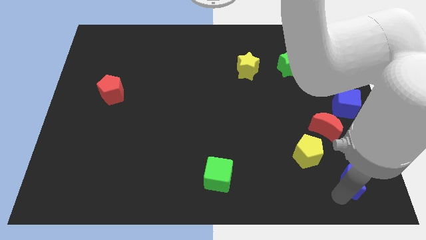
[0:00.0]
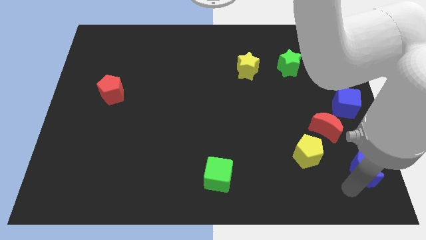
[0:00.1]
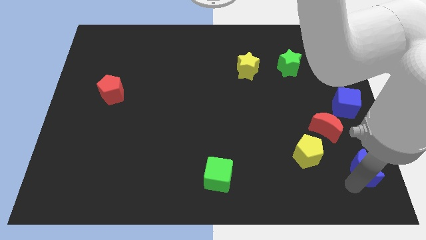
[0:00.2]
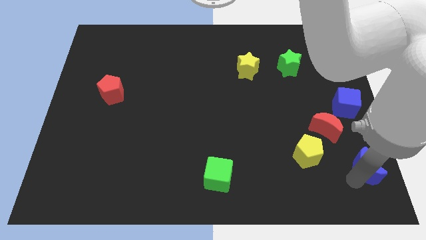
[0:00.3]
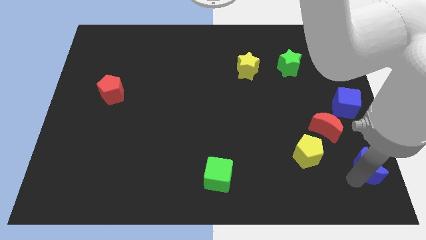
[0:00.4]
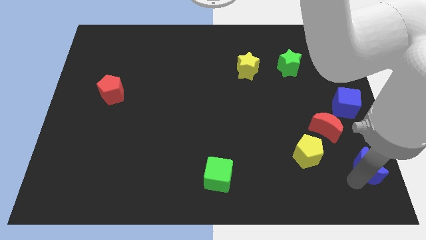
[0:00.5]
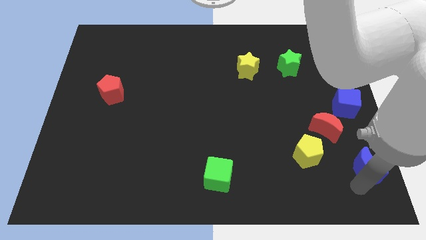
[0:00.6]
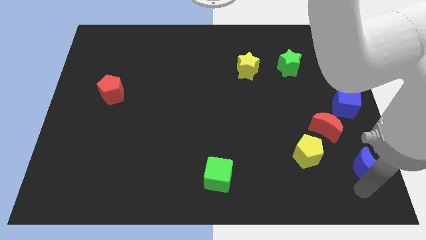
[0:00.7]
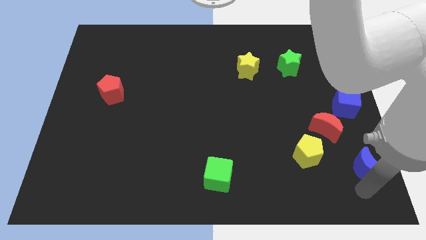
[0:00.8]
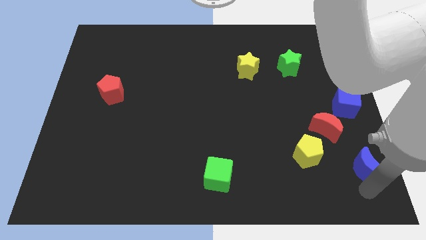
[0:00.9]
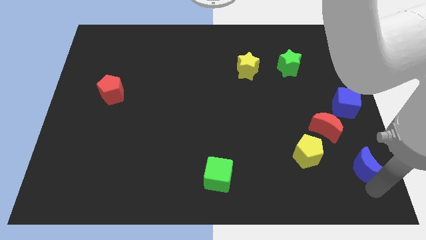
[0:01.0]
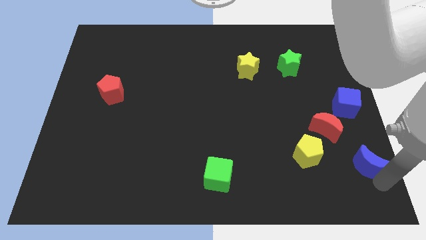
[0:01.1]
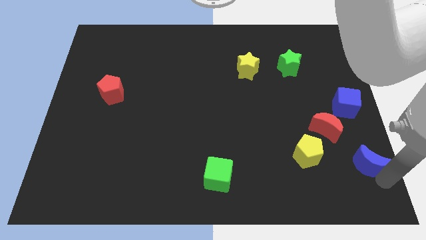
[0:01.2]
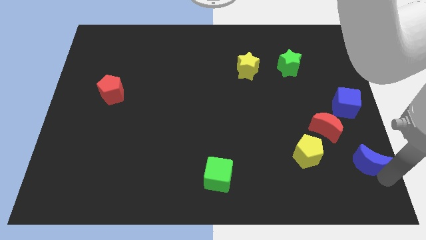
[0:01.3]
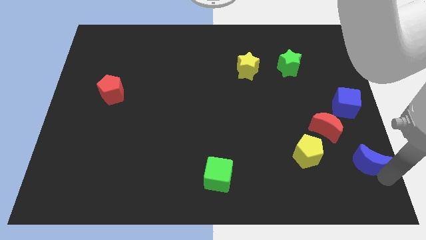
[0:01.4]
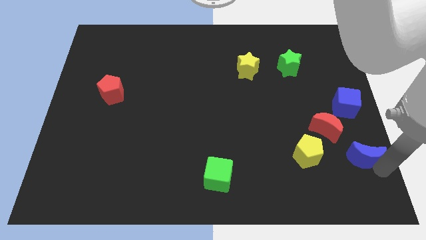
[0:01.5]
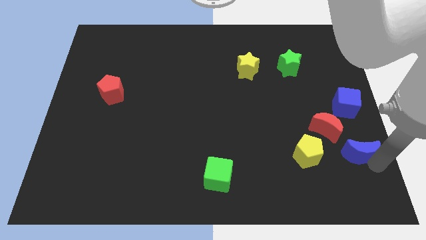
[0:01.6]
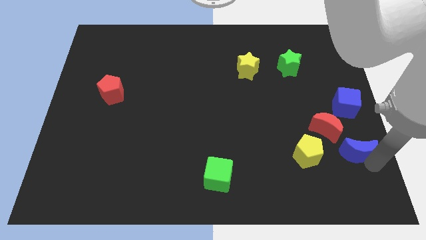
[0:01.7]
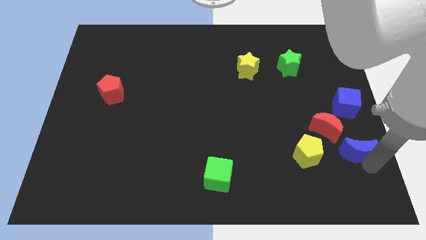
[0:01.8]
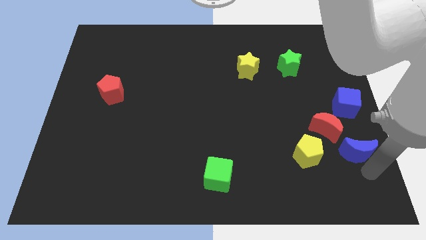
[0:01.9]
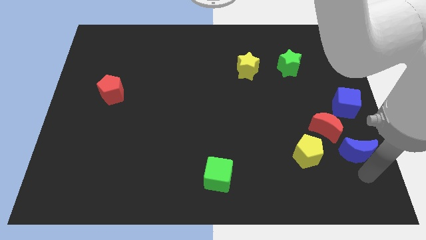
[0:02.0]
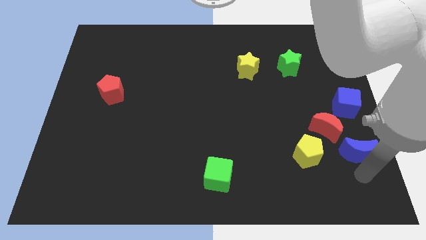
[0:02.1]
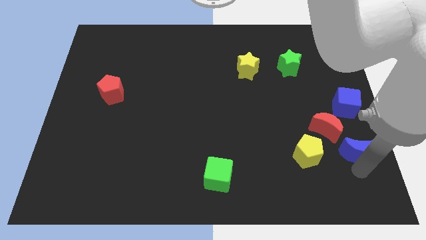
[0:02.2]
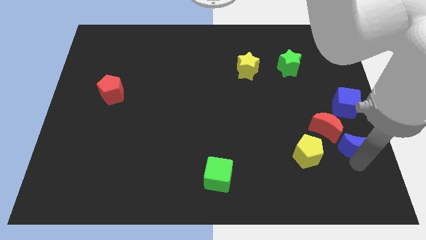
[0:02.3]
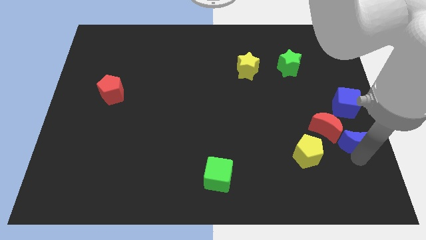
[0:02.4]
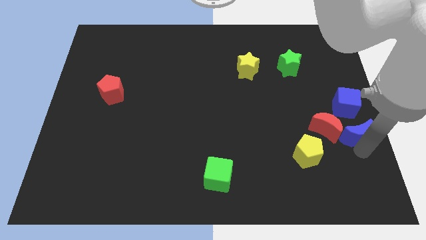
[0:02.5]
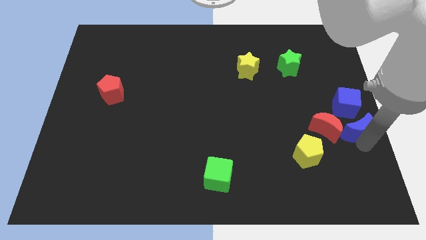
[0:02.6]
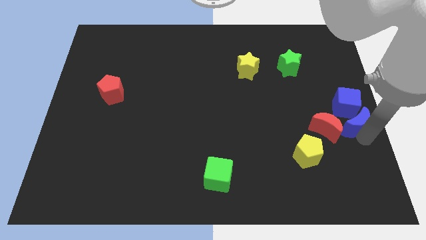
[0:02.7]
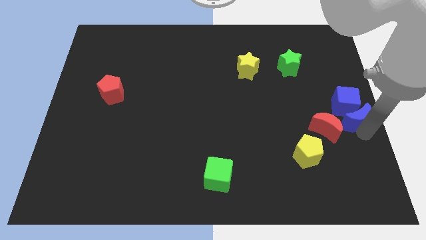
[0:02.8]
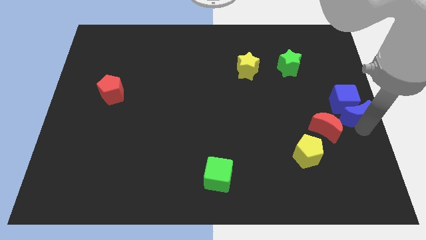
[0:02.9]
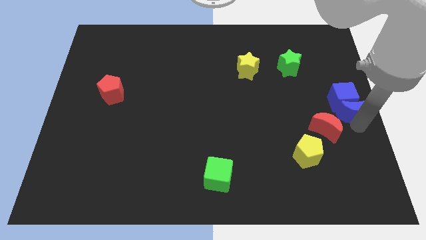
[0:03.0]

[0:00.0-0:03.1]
move blue moon into the blue cube

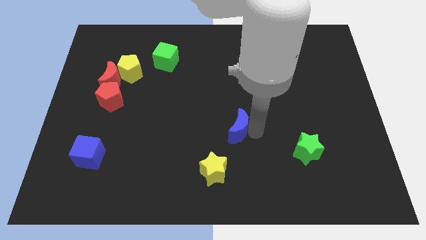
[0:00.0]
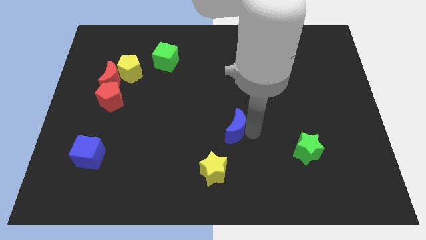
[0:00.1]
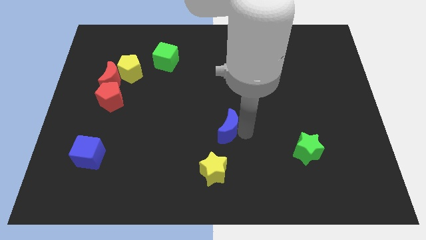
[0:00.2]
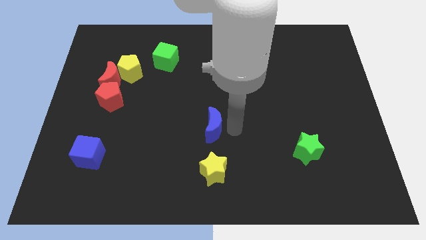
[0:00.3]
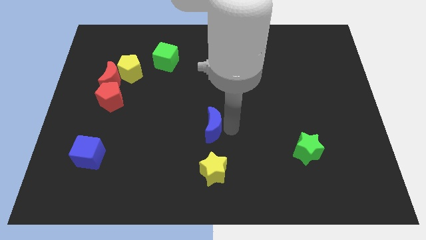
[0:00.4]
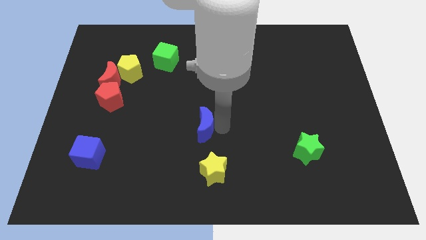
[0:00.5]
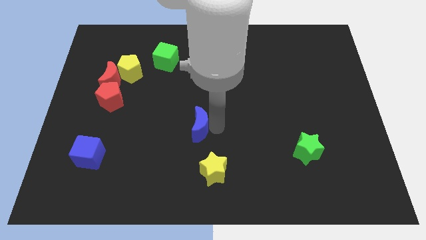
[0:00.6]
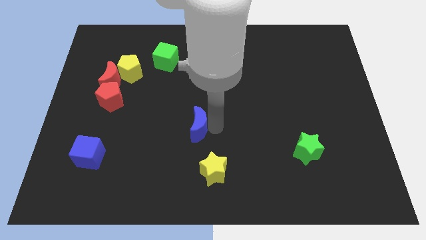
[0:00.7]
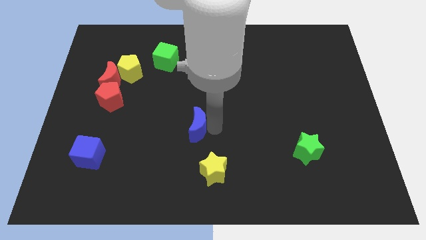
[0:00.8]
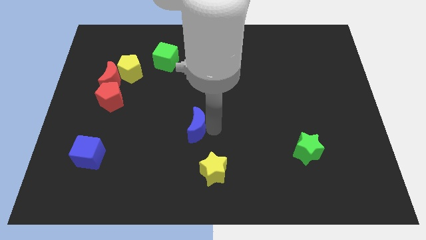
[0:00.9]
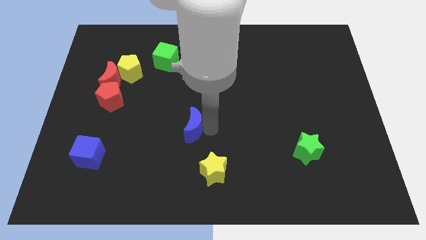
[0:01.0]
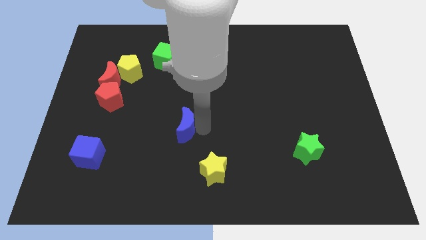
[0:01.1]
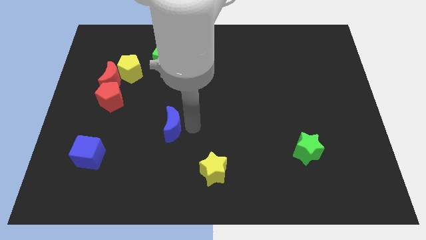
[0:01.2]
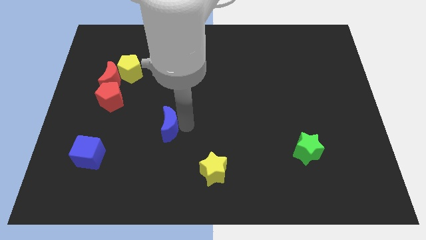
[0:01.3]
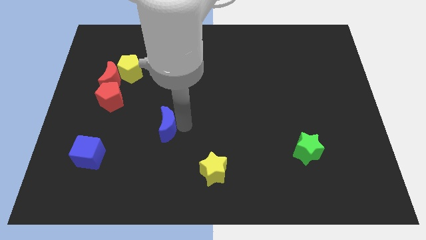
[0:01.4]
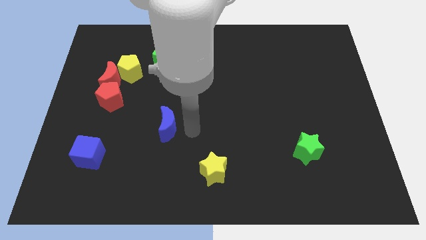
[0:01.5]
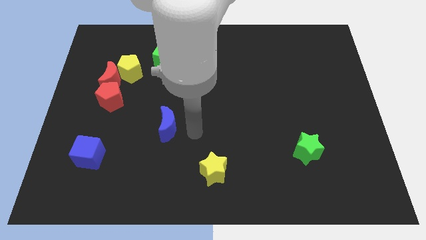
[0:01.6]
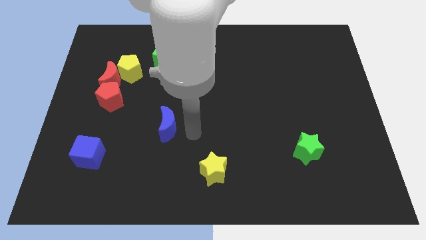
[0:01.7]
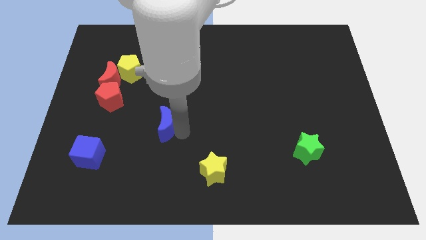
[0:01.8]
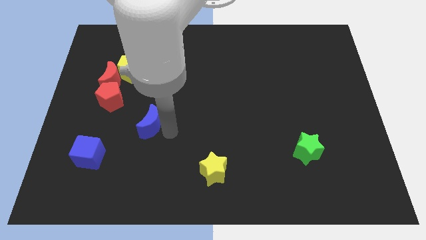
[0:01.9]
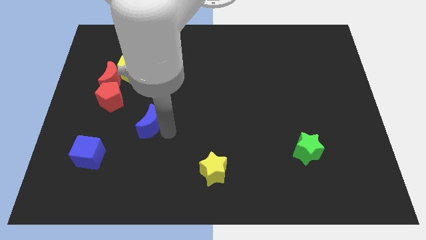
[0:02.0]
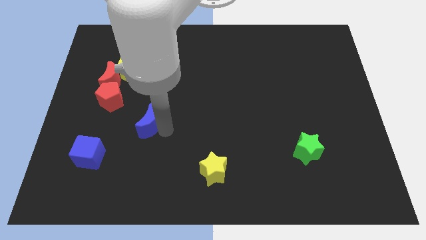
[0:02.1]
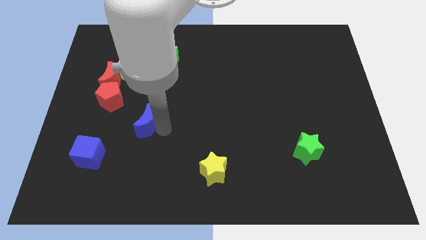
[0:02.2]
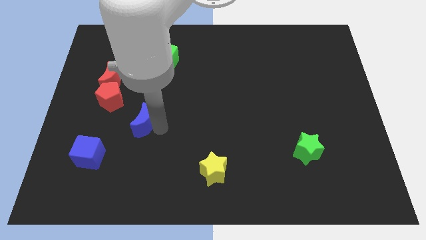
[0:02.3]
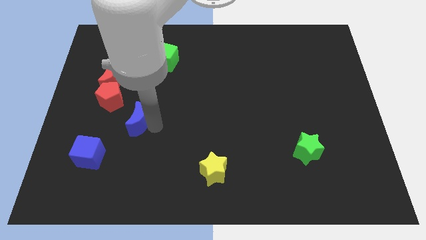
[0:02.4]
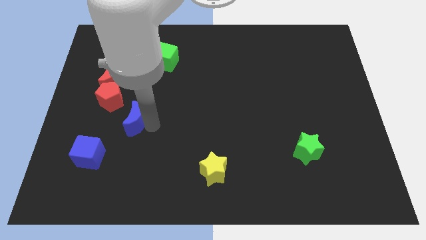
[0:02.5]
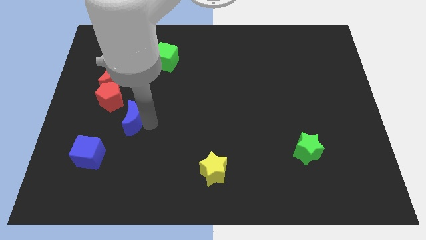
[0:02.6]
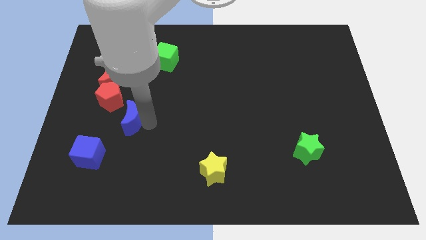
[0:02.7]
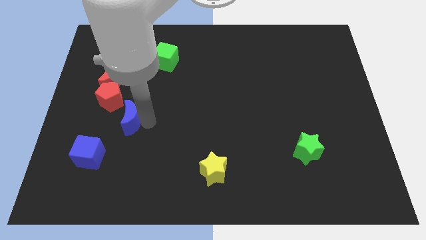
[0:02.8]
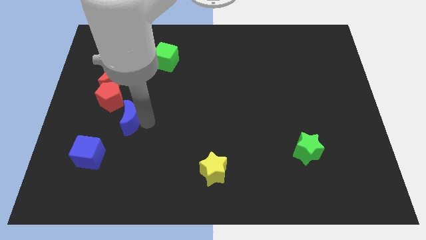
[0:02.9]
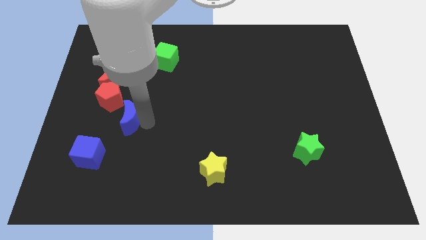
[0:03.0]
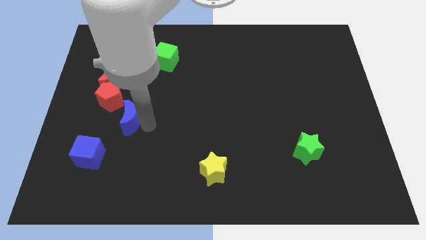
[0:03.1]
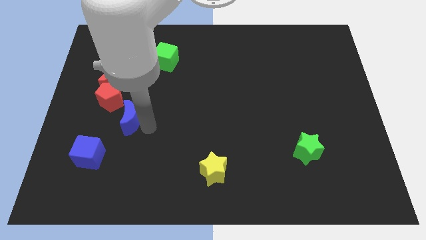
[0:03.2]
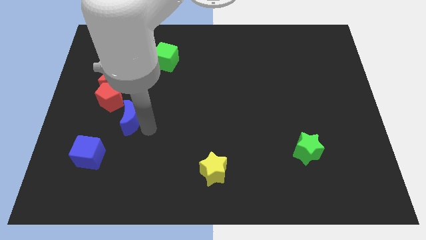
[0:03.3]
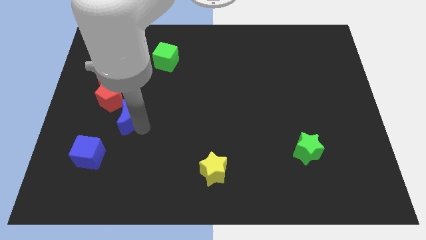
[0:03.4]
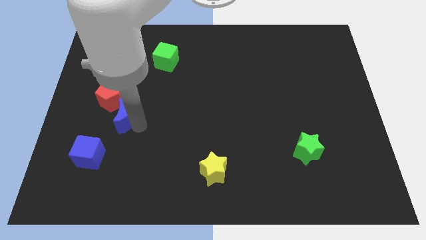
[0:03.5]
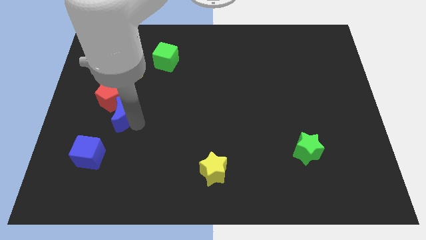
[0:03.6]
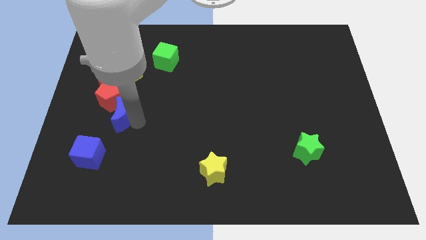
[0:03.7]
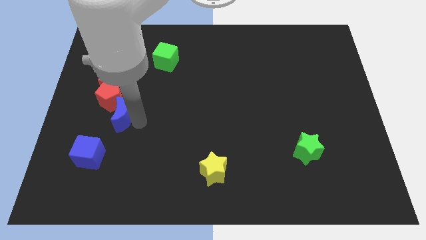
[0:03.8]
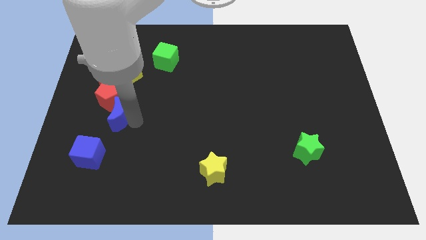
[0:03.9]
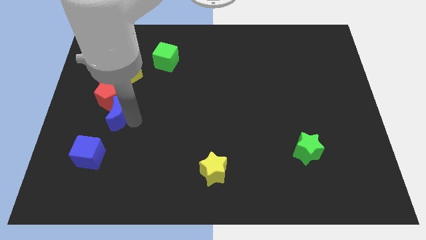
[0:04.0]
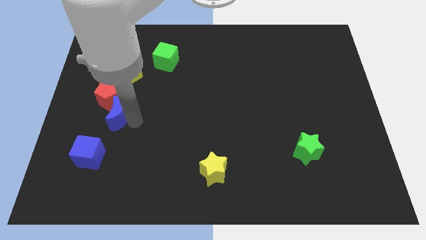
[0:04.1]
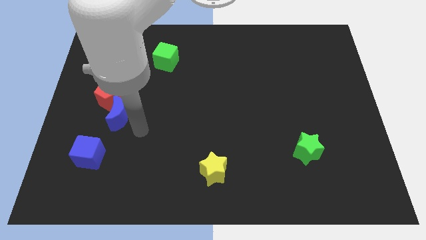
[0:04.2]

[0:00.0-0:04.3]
move the blue crescent to the bottom of the red pentagon

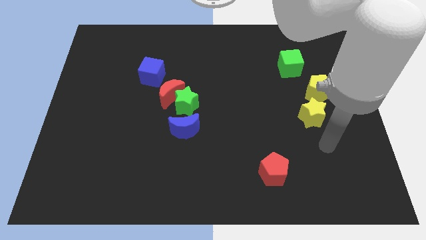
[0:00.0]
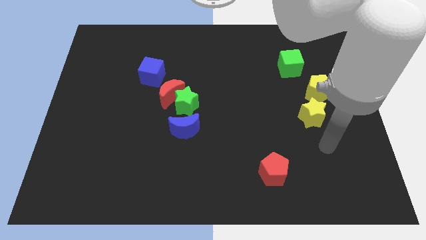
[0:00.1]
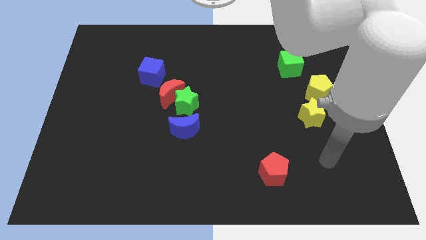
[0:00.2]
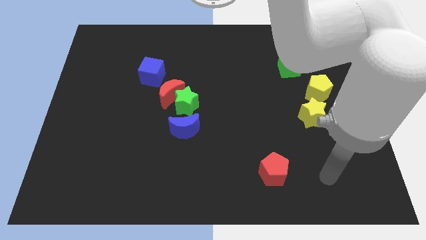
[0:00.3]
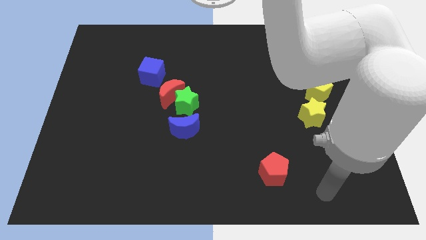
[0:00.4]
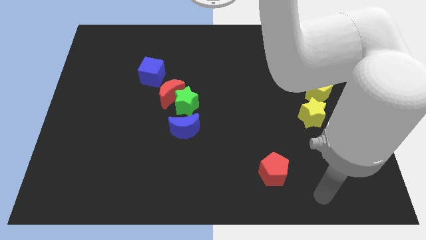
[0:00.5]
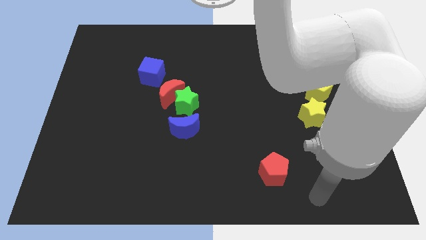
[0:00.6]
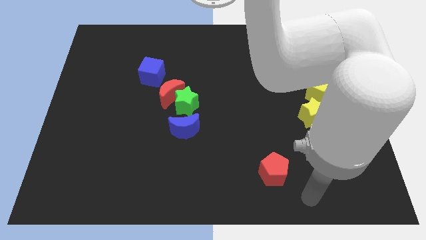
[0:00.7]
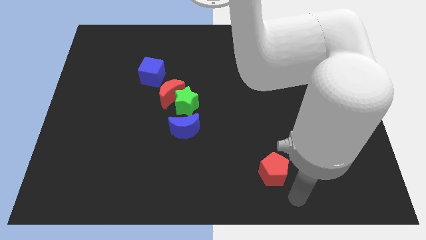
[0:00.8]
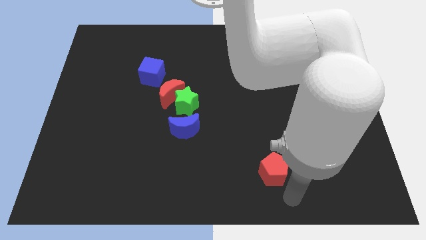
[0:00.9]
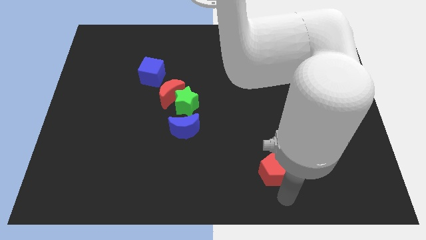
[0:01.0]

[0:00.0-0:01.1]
place your hand under the red pentagon

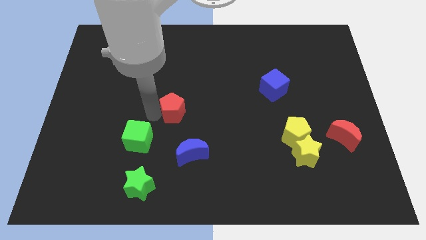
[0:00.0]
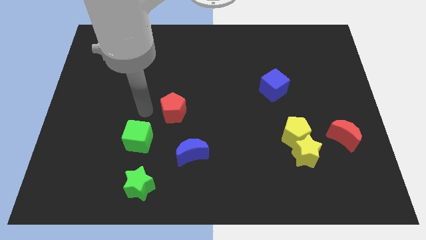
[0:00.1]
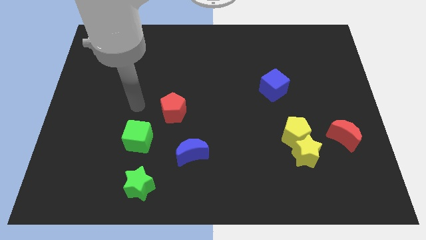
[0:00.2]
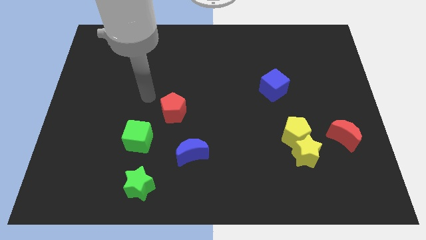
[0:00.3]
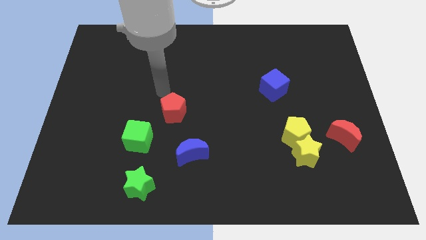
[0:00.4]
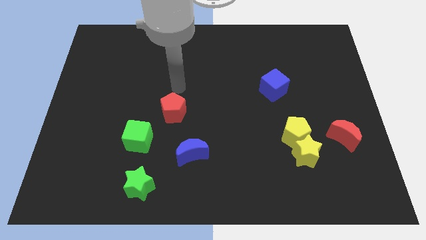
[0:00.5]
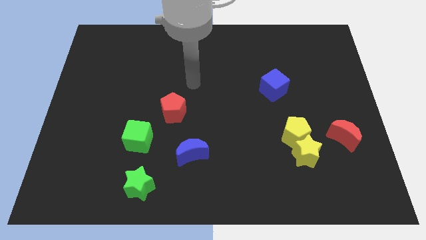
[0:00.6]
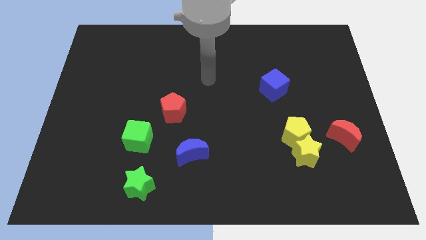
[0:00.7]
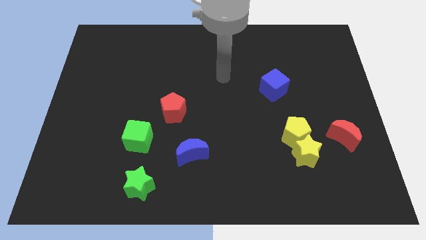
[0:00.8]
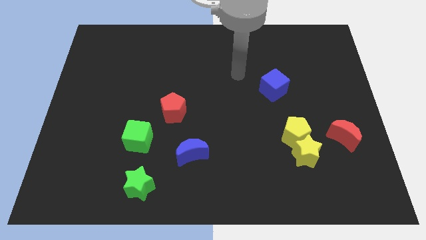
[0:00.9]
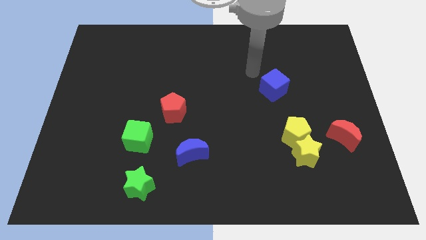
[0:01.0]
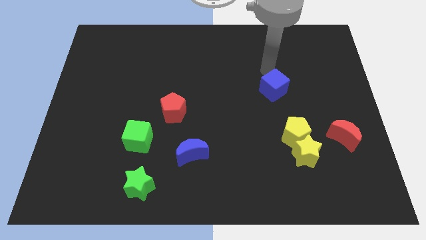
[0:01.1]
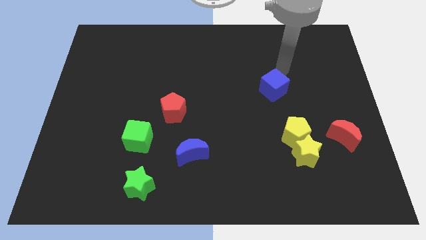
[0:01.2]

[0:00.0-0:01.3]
move your arm close to the top side of the blue cube
